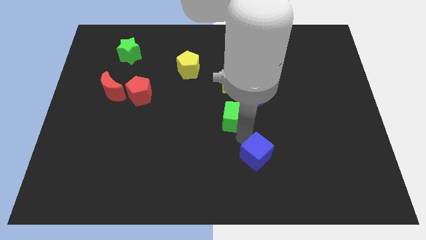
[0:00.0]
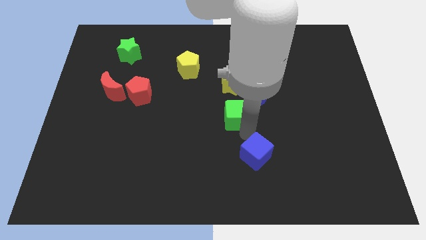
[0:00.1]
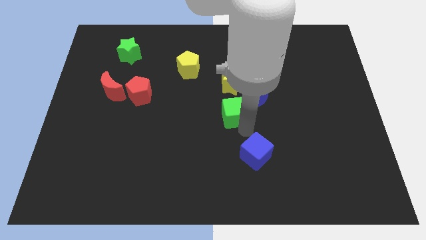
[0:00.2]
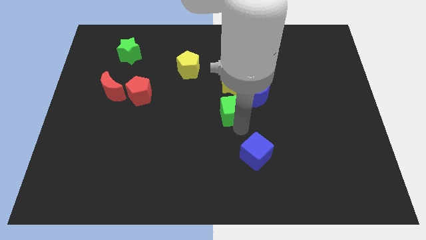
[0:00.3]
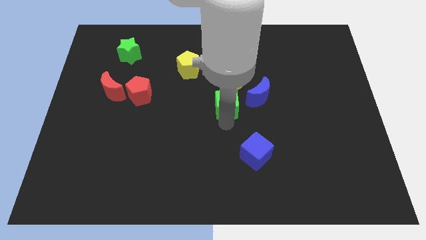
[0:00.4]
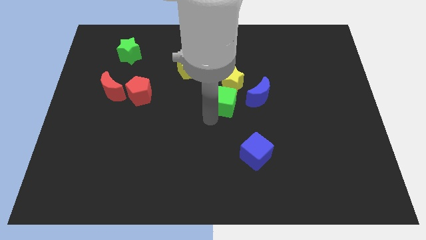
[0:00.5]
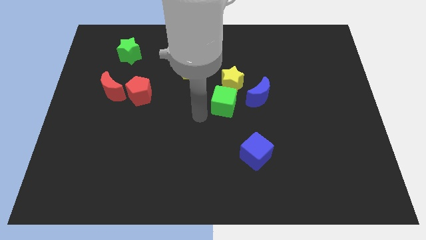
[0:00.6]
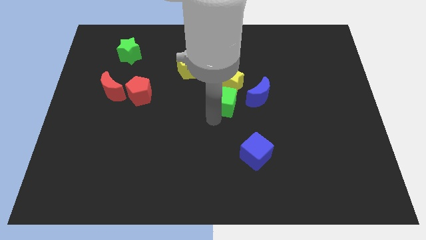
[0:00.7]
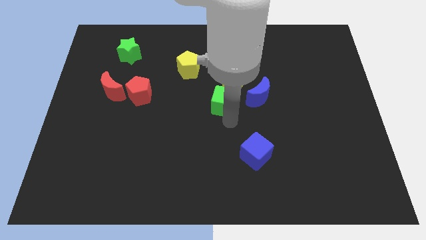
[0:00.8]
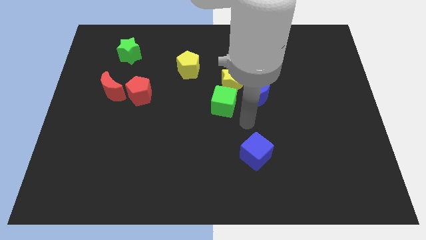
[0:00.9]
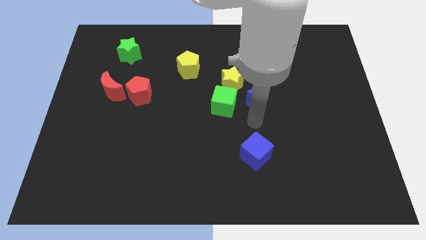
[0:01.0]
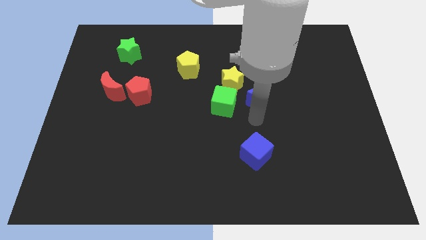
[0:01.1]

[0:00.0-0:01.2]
move the green cube towards the yellow star

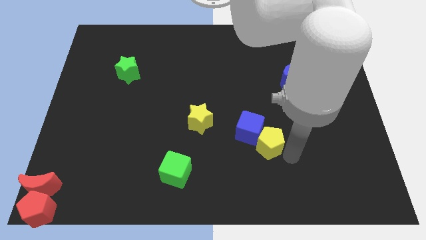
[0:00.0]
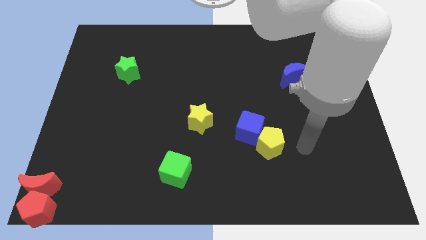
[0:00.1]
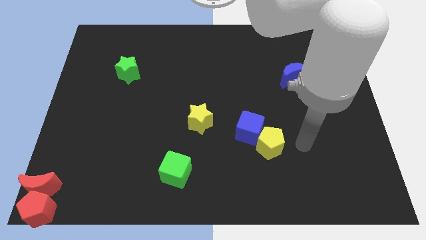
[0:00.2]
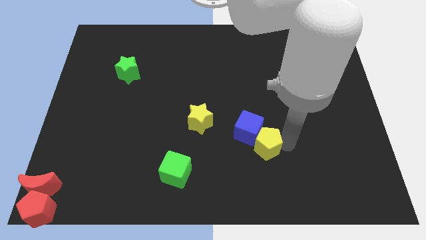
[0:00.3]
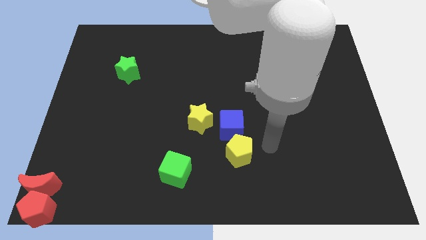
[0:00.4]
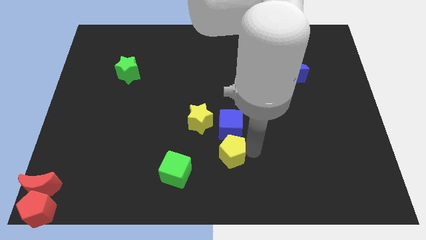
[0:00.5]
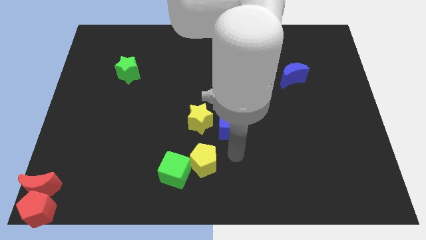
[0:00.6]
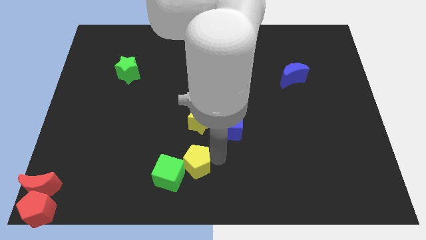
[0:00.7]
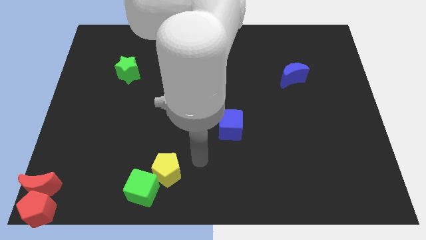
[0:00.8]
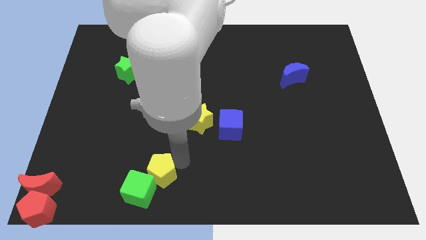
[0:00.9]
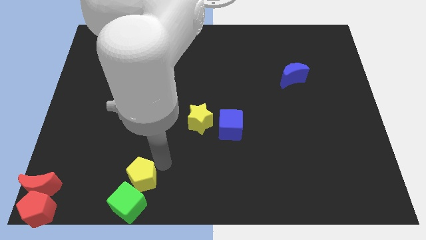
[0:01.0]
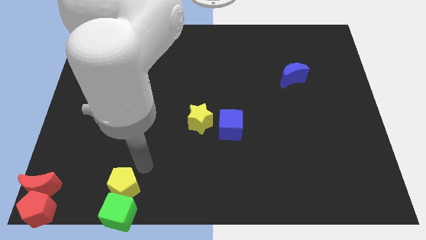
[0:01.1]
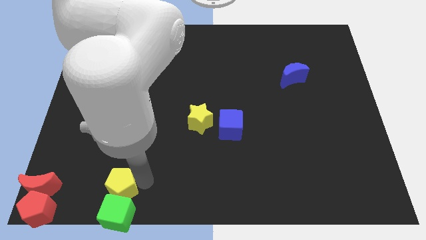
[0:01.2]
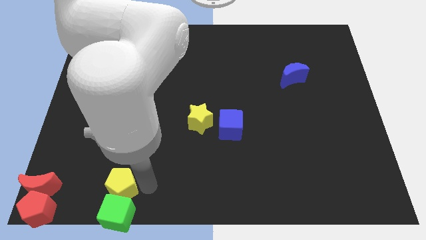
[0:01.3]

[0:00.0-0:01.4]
push the yellow and green block to the bottom left

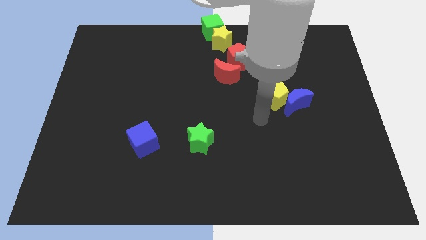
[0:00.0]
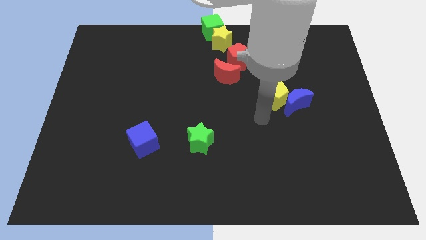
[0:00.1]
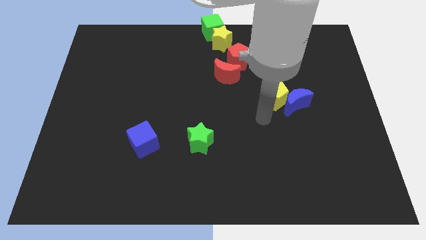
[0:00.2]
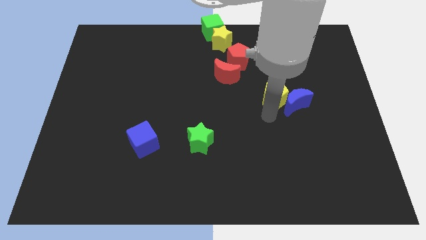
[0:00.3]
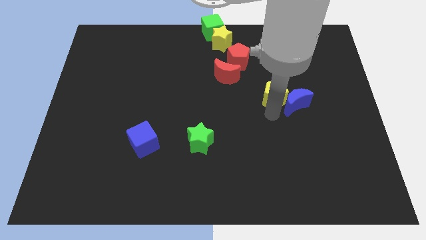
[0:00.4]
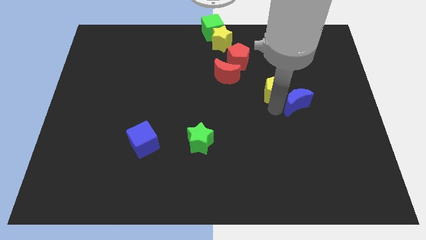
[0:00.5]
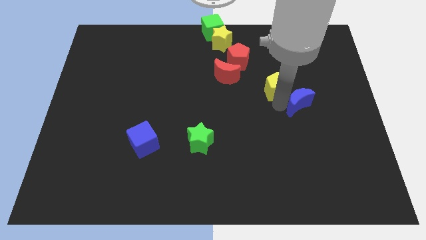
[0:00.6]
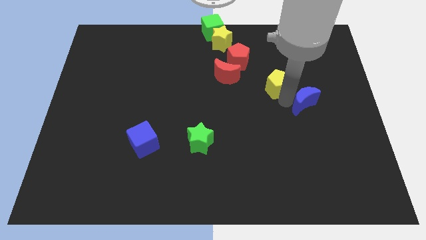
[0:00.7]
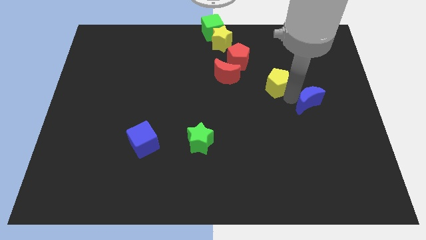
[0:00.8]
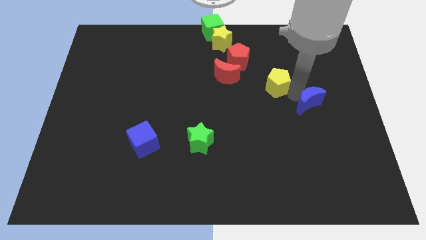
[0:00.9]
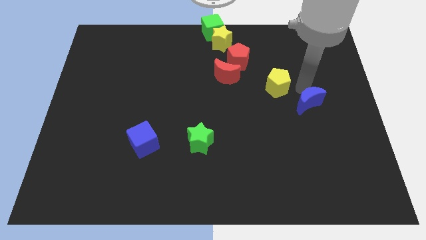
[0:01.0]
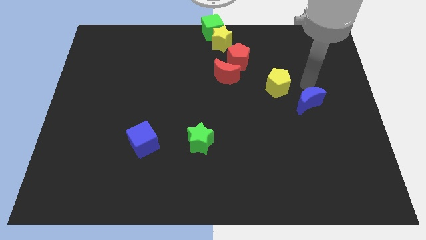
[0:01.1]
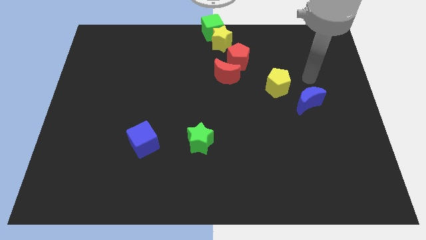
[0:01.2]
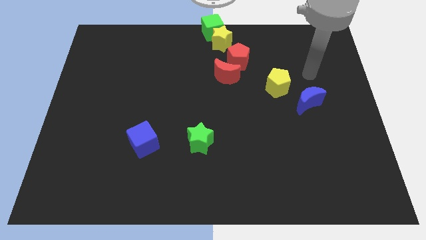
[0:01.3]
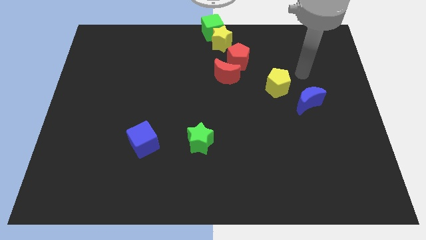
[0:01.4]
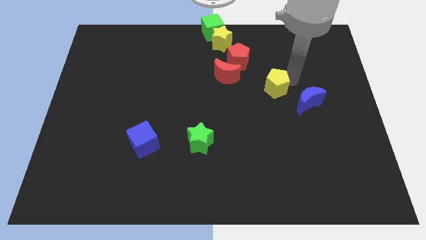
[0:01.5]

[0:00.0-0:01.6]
move your arm in between the yellow pentagon and the blue moon

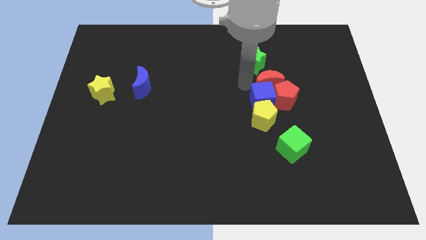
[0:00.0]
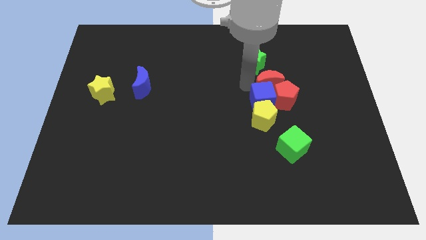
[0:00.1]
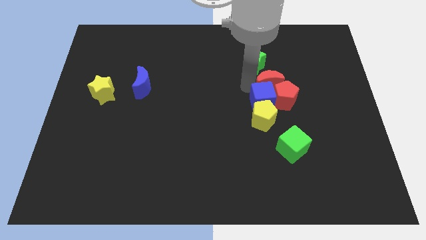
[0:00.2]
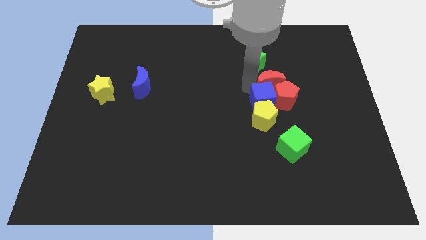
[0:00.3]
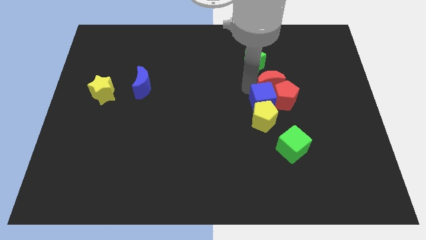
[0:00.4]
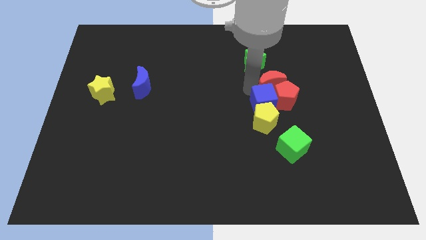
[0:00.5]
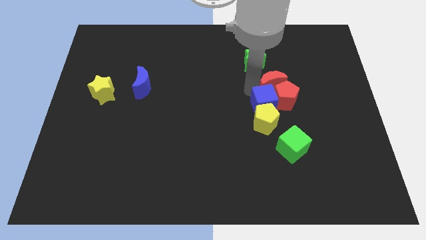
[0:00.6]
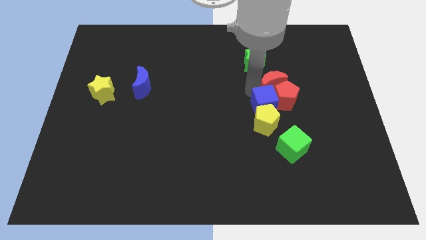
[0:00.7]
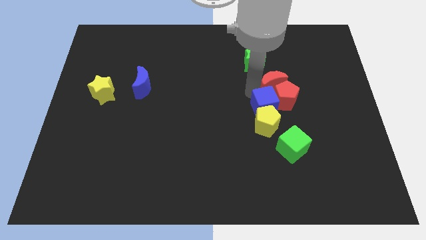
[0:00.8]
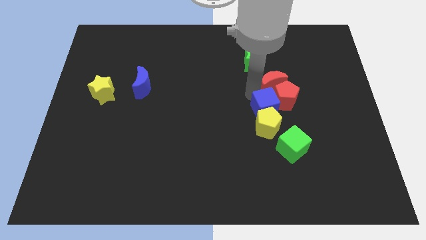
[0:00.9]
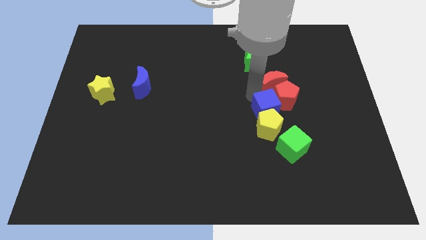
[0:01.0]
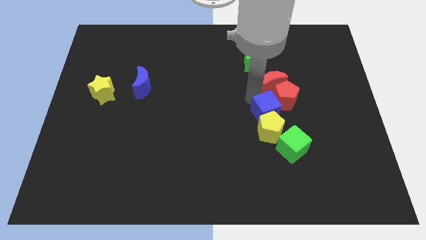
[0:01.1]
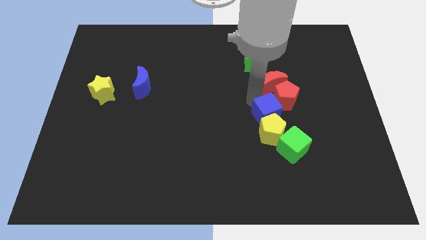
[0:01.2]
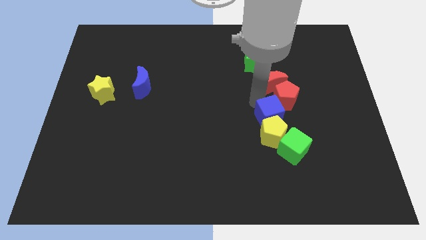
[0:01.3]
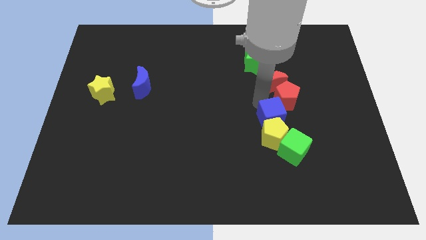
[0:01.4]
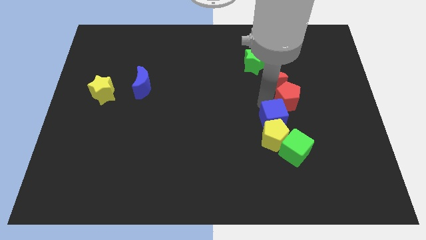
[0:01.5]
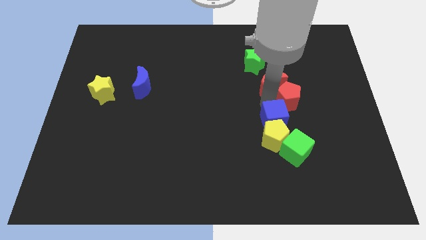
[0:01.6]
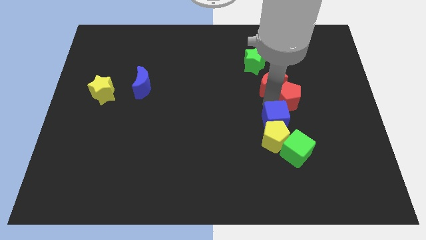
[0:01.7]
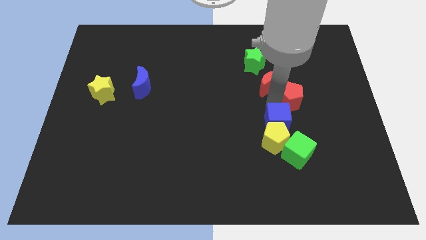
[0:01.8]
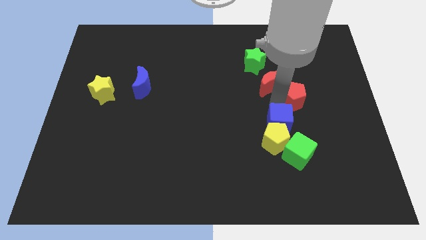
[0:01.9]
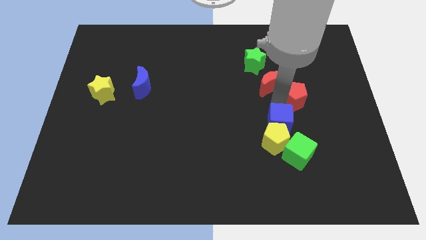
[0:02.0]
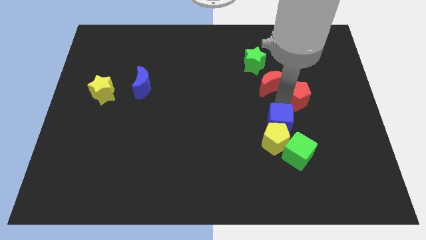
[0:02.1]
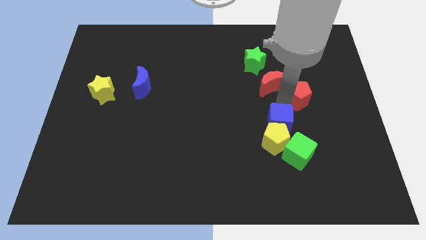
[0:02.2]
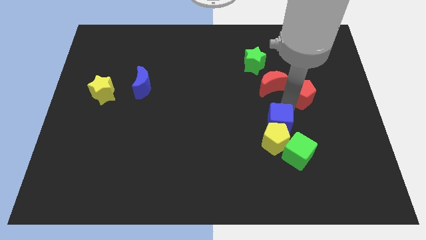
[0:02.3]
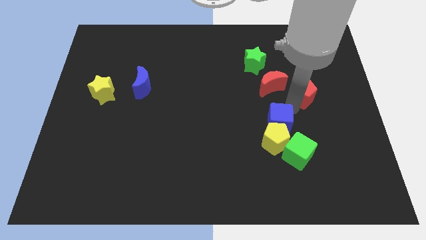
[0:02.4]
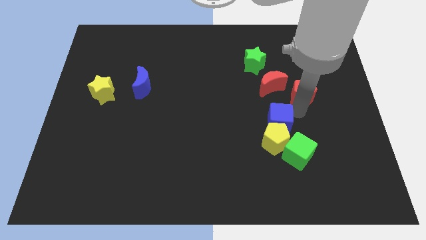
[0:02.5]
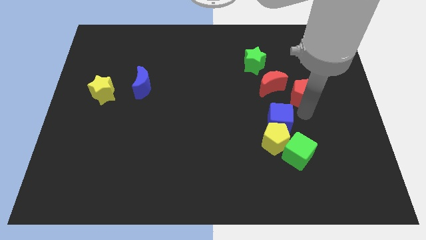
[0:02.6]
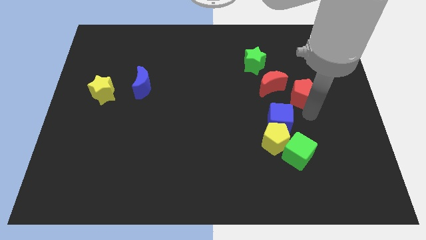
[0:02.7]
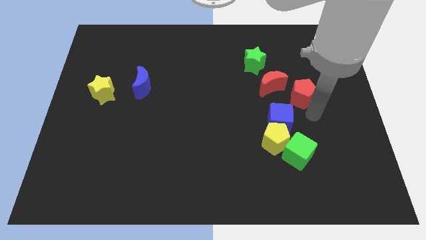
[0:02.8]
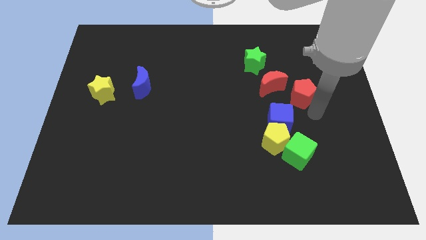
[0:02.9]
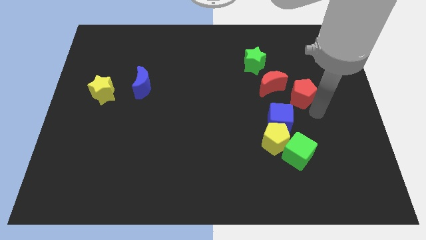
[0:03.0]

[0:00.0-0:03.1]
move the blue cube along with the yellow pentagon into the green cube

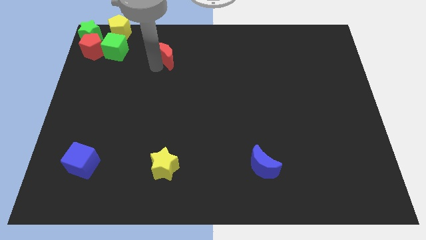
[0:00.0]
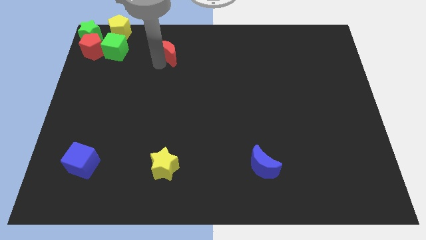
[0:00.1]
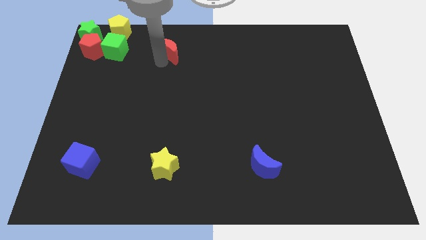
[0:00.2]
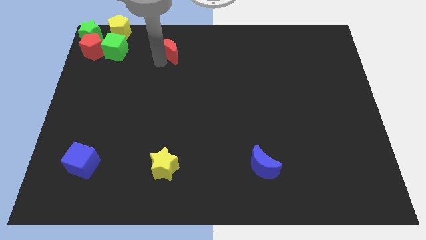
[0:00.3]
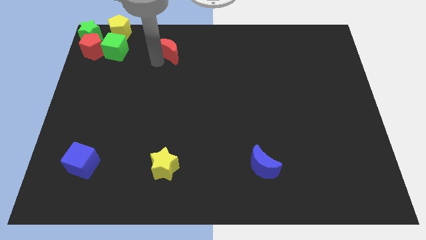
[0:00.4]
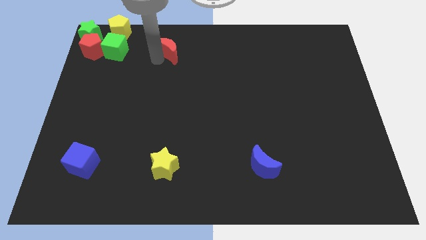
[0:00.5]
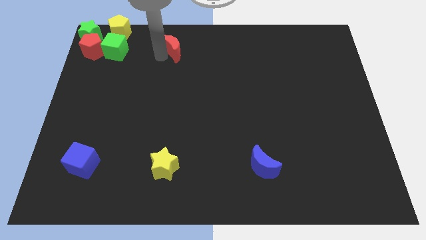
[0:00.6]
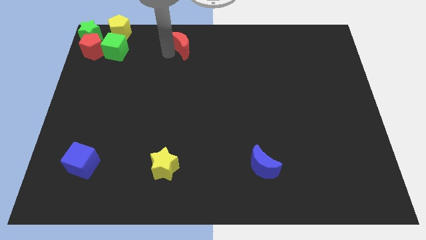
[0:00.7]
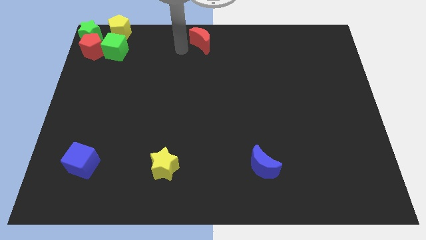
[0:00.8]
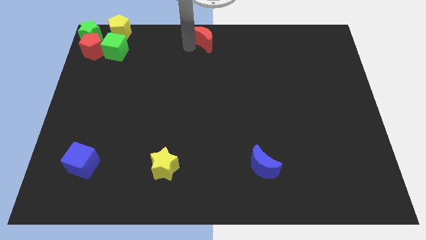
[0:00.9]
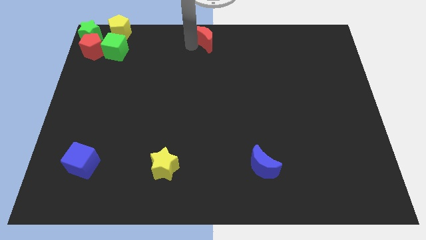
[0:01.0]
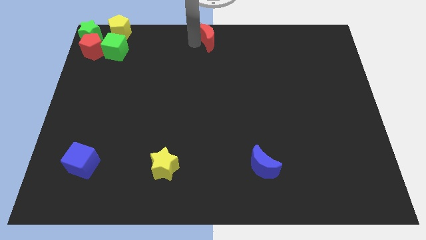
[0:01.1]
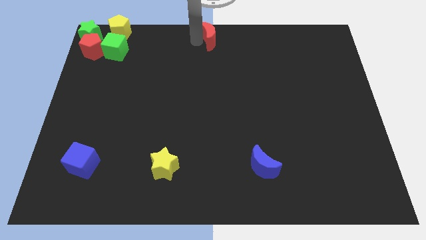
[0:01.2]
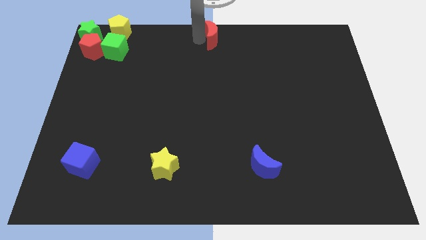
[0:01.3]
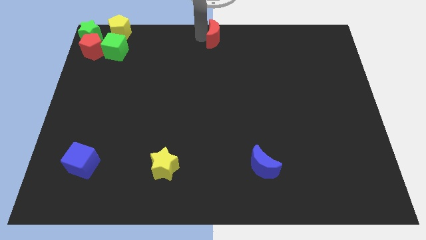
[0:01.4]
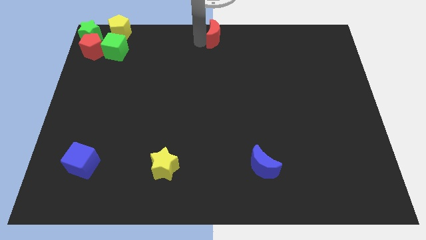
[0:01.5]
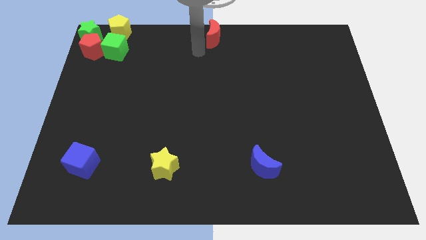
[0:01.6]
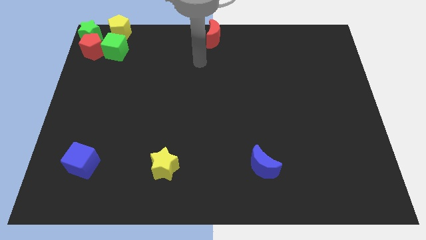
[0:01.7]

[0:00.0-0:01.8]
place the red moon at the top center
